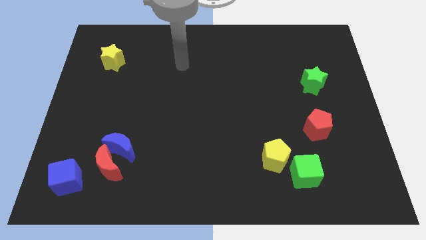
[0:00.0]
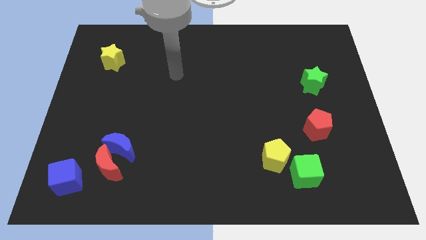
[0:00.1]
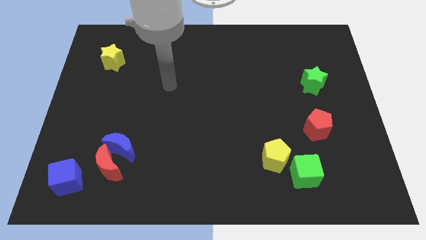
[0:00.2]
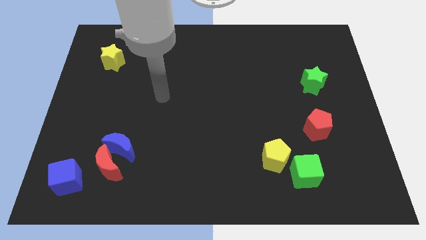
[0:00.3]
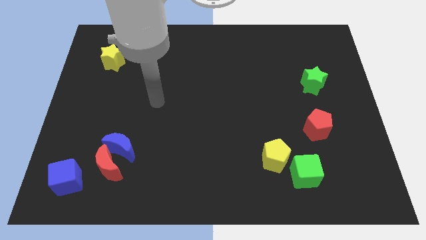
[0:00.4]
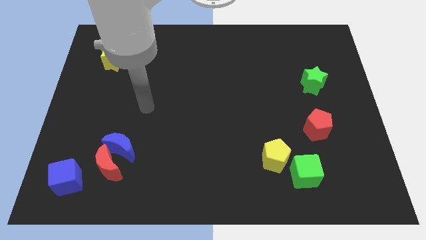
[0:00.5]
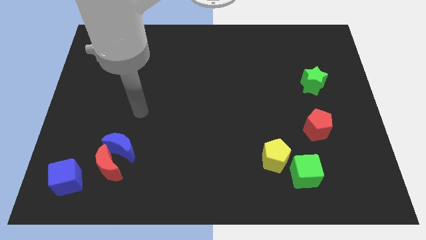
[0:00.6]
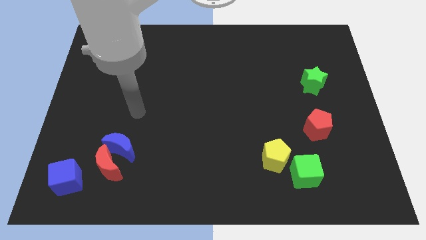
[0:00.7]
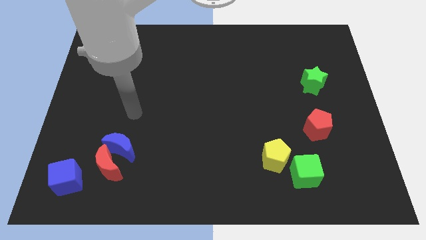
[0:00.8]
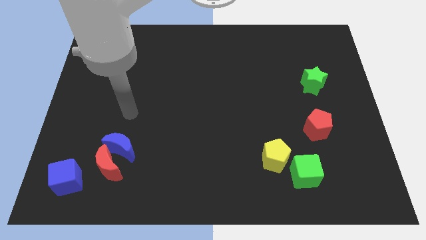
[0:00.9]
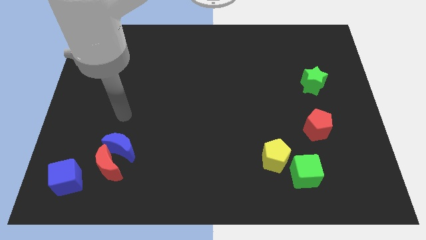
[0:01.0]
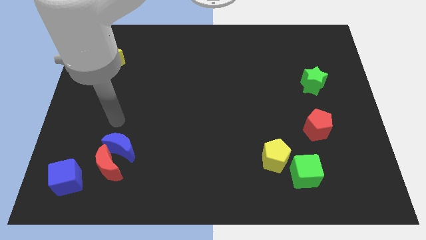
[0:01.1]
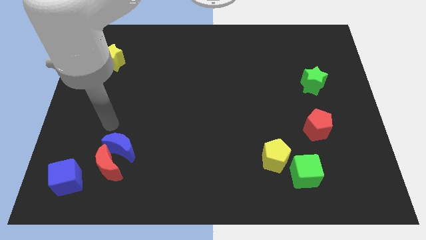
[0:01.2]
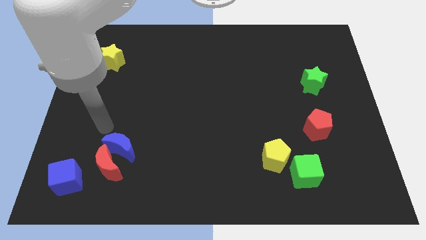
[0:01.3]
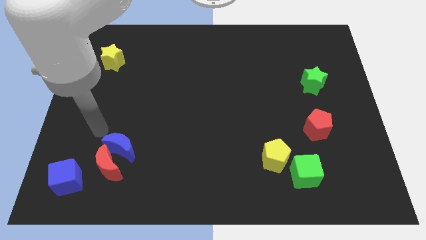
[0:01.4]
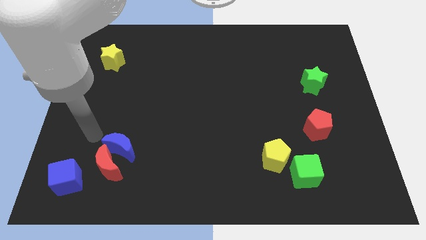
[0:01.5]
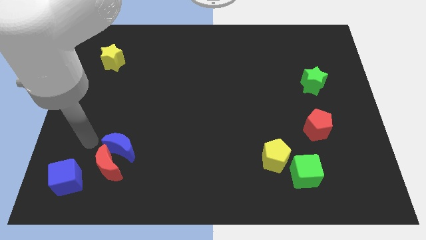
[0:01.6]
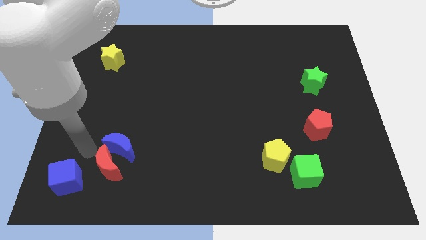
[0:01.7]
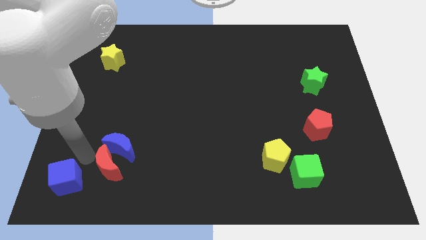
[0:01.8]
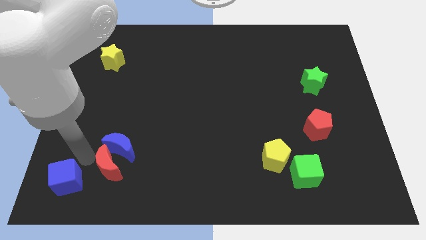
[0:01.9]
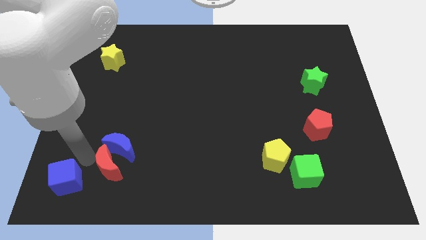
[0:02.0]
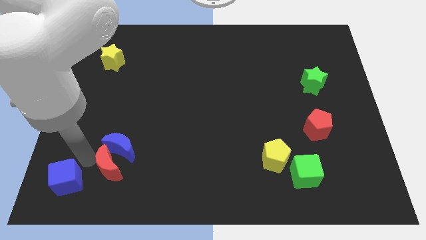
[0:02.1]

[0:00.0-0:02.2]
place your arm in between red moon and blue cube

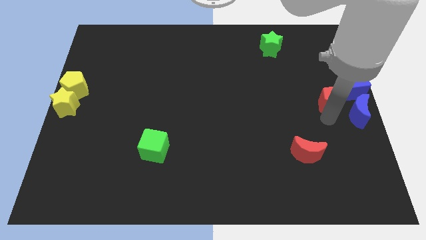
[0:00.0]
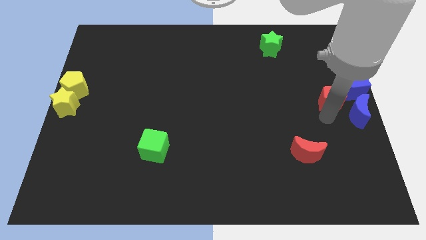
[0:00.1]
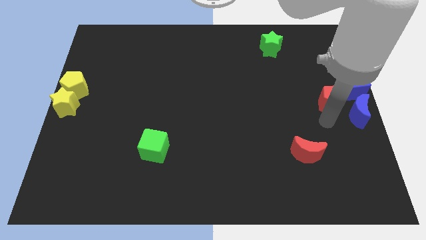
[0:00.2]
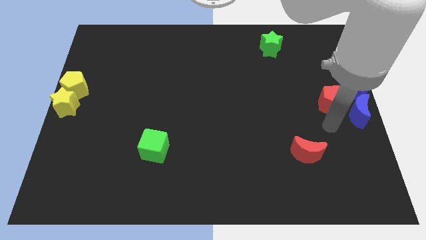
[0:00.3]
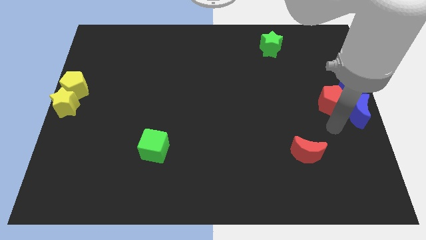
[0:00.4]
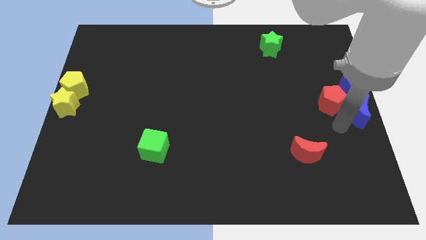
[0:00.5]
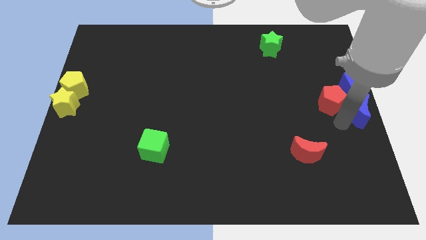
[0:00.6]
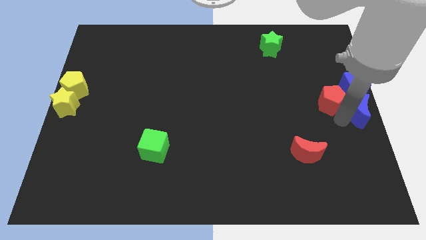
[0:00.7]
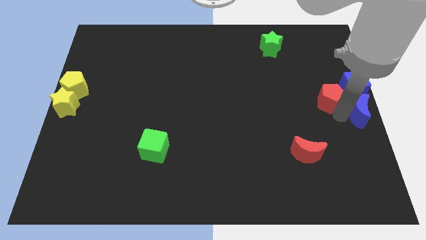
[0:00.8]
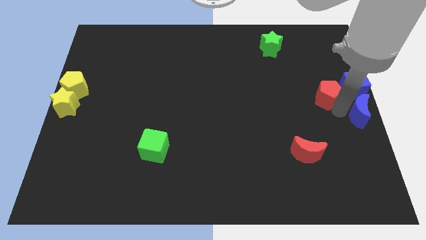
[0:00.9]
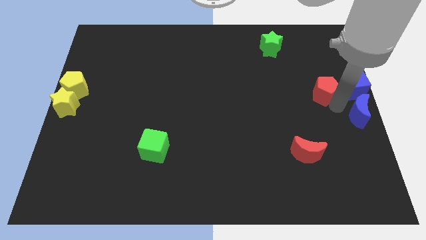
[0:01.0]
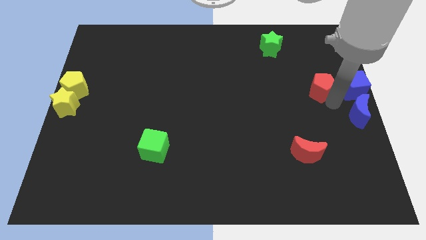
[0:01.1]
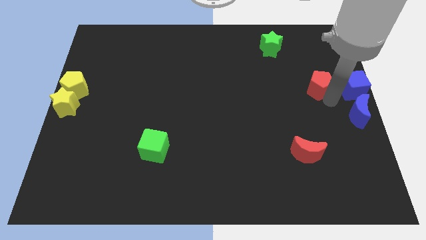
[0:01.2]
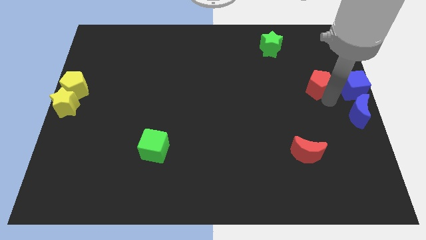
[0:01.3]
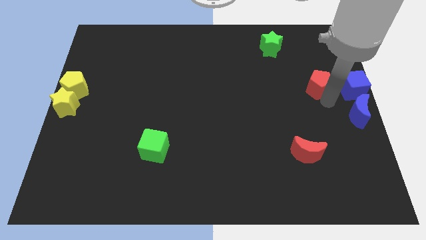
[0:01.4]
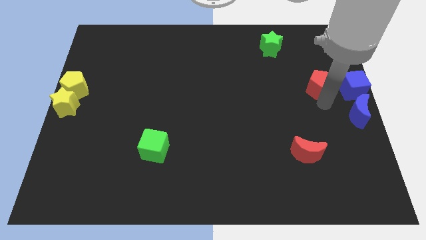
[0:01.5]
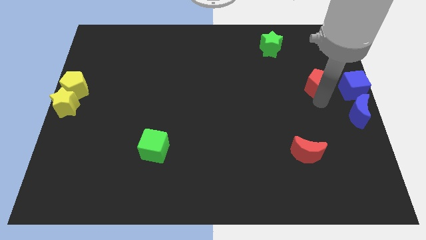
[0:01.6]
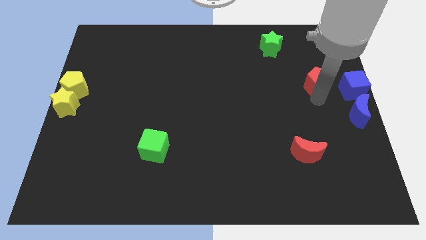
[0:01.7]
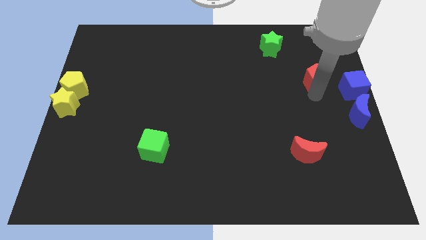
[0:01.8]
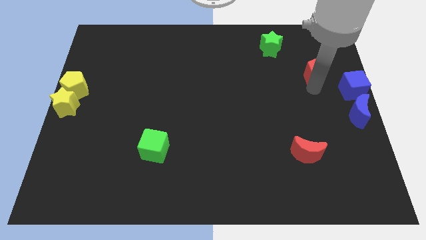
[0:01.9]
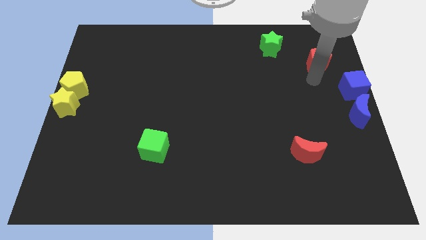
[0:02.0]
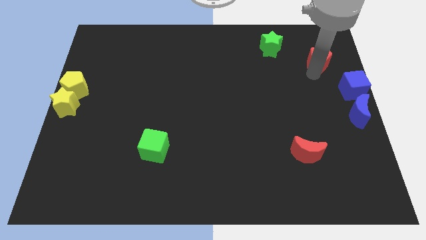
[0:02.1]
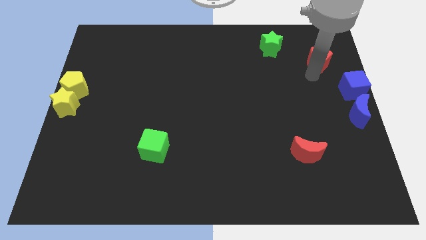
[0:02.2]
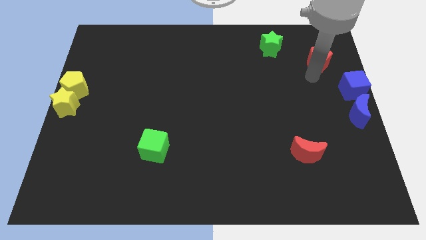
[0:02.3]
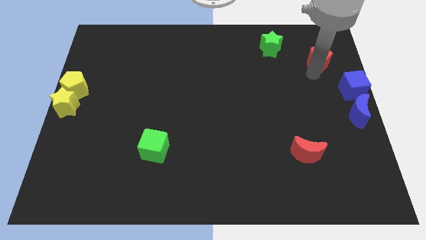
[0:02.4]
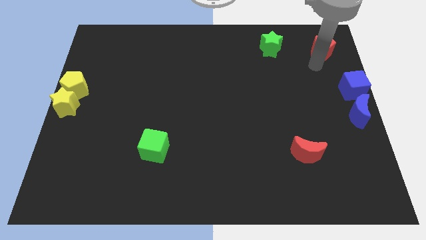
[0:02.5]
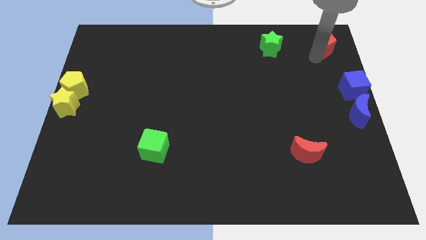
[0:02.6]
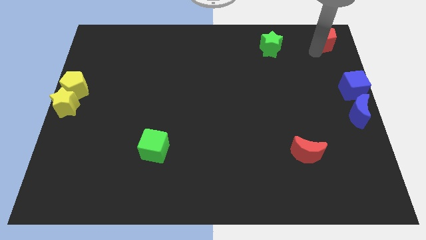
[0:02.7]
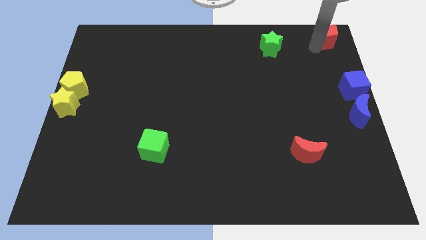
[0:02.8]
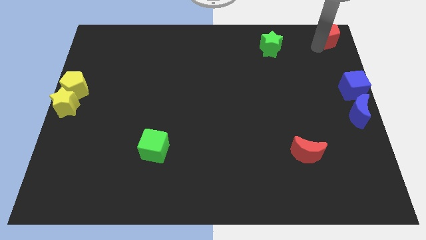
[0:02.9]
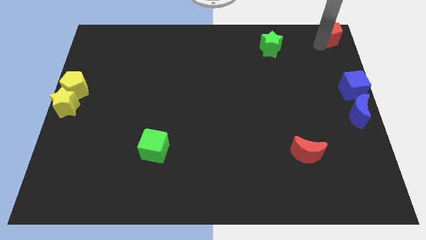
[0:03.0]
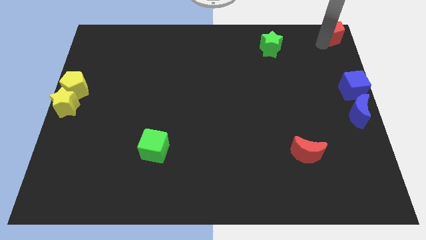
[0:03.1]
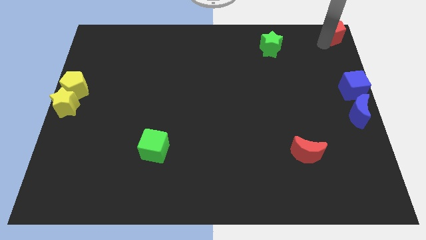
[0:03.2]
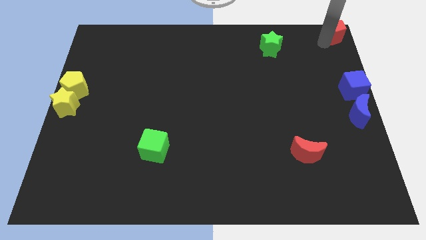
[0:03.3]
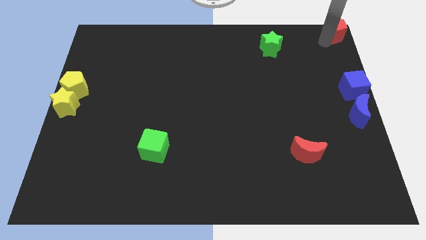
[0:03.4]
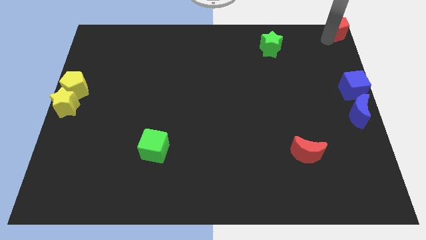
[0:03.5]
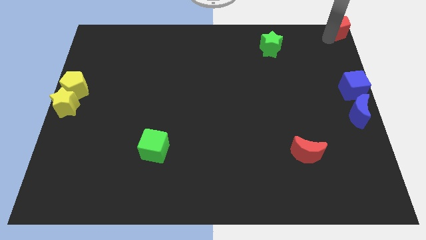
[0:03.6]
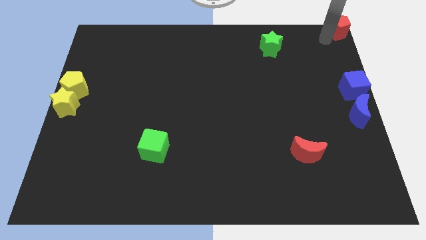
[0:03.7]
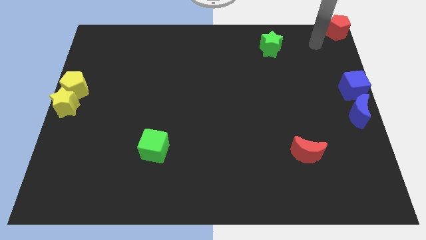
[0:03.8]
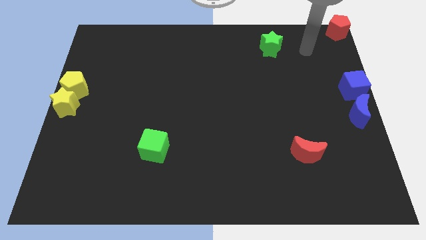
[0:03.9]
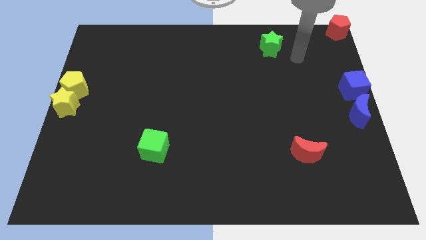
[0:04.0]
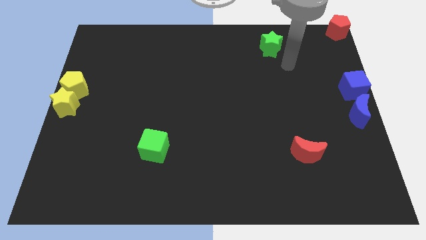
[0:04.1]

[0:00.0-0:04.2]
push the red pentagon to the top right corner of the board

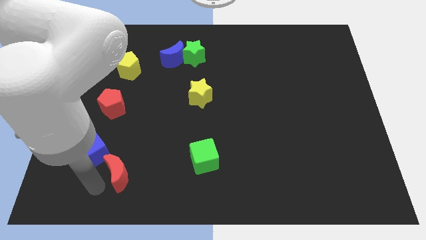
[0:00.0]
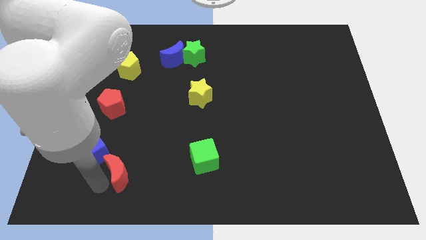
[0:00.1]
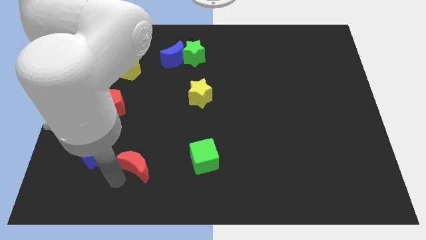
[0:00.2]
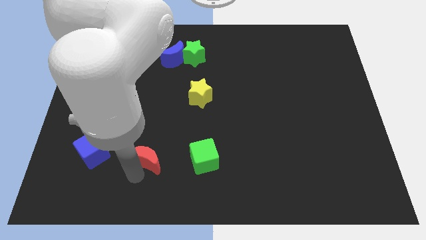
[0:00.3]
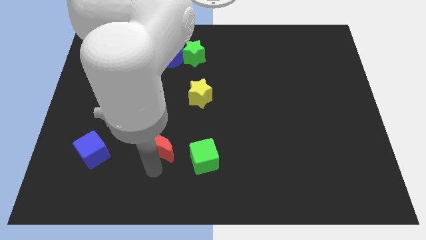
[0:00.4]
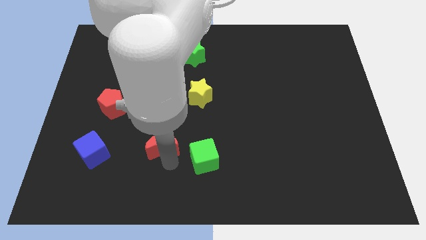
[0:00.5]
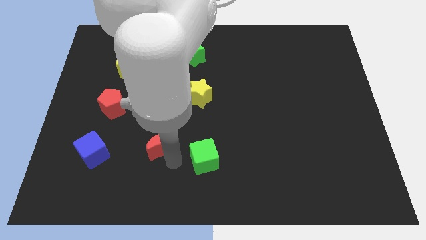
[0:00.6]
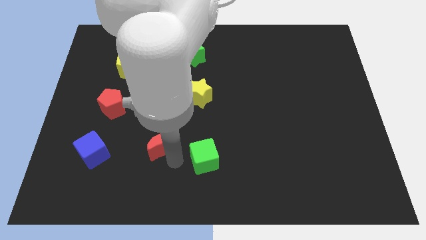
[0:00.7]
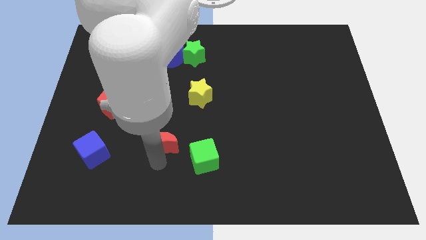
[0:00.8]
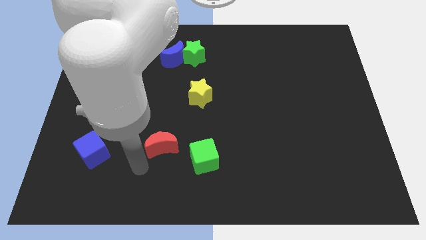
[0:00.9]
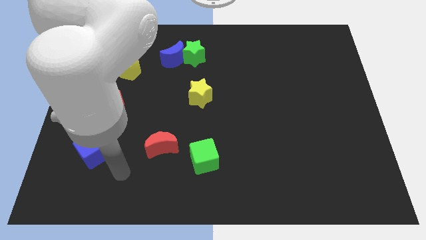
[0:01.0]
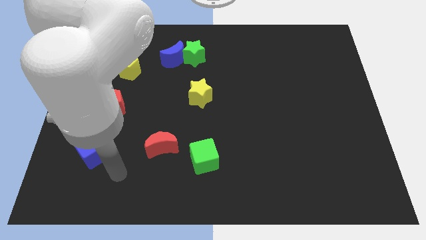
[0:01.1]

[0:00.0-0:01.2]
separate the red moon from the blue cube

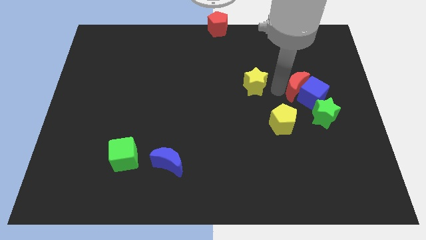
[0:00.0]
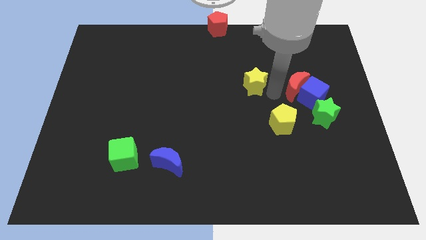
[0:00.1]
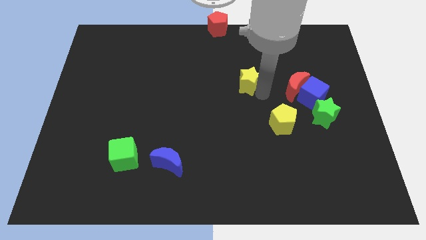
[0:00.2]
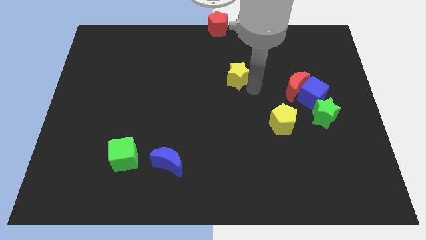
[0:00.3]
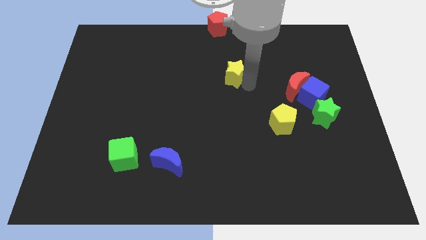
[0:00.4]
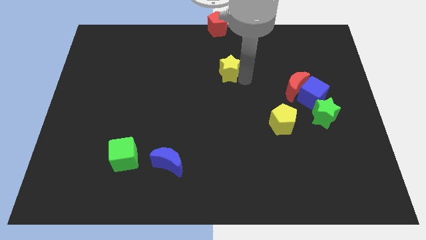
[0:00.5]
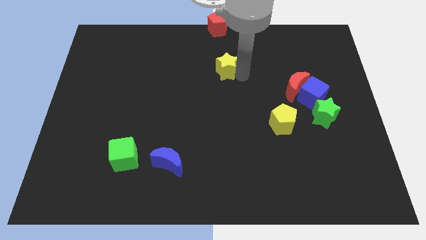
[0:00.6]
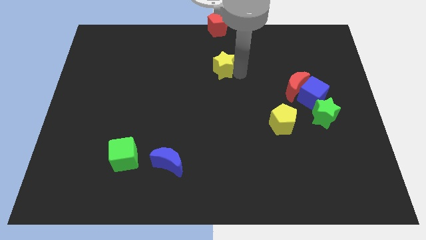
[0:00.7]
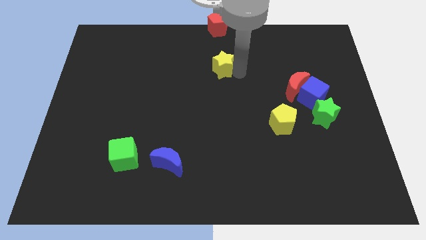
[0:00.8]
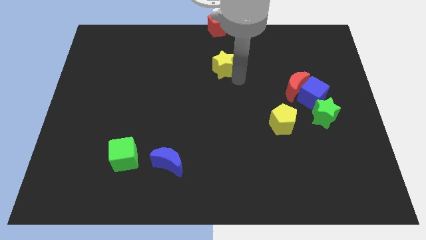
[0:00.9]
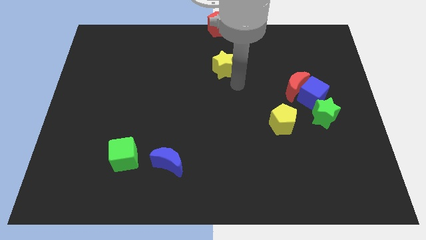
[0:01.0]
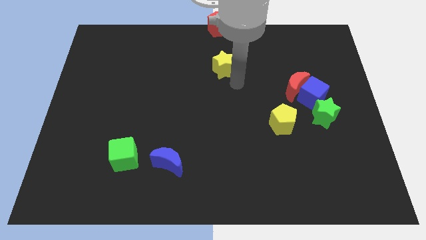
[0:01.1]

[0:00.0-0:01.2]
slide yellow star towards top center

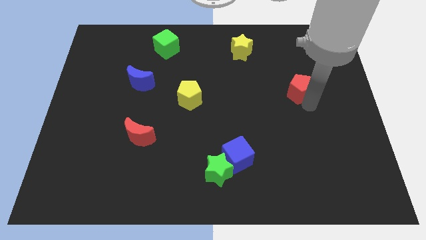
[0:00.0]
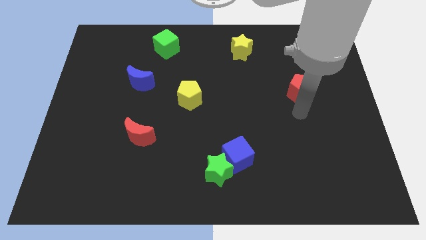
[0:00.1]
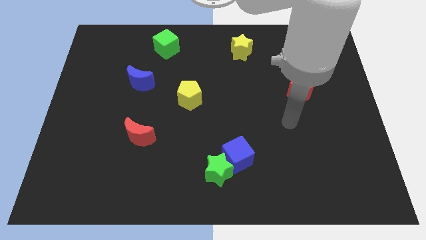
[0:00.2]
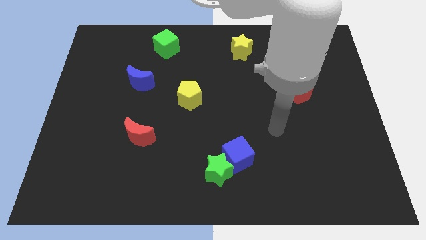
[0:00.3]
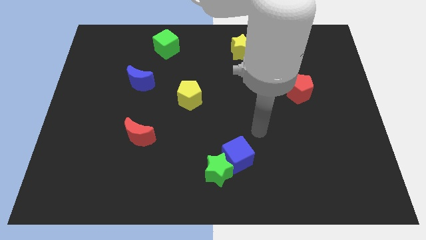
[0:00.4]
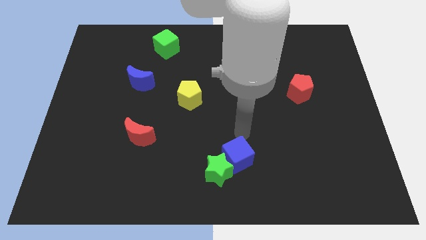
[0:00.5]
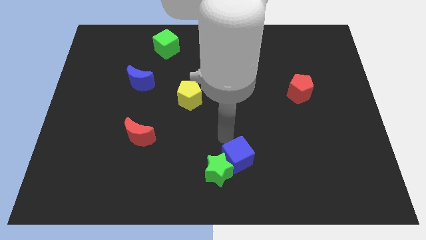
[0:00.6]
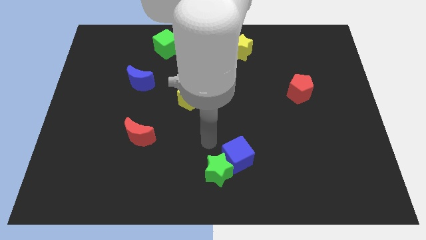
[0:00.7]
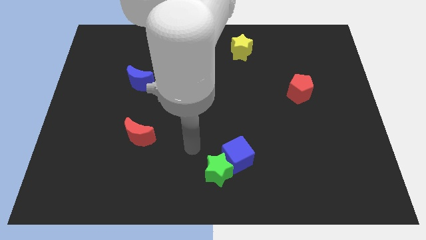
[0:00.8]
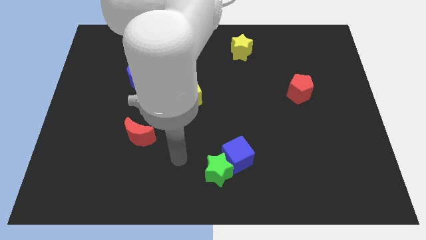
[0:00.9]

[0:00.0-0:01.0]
place your arm in between red moon and green star
